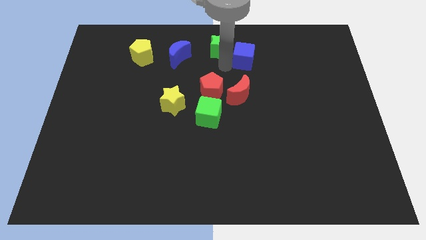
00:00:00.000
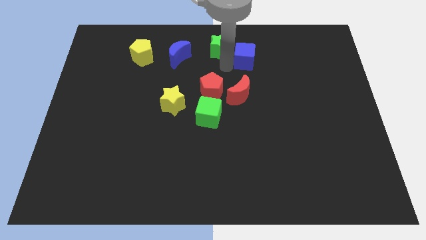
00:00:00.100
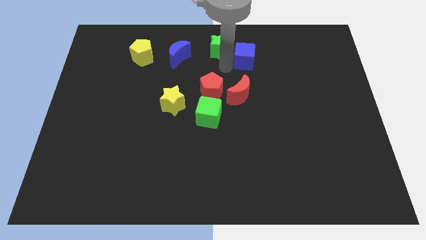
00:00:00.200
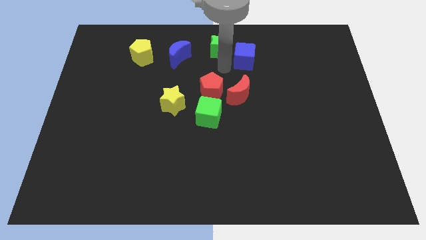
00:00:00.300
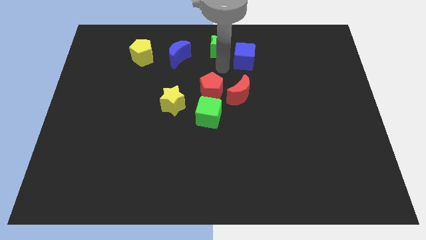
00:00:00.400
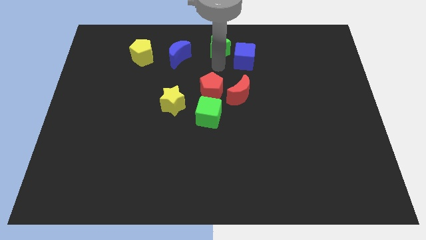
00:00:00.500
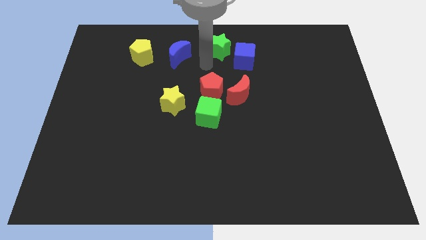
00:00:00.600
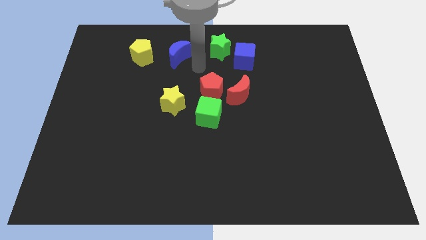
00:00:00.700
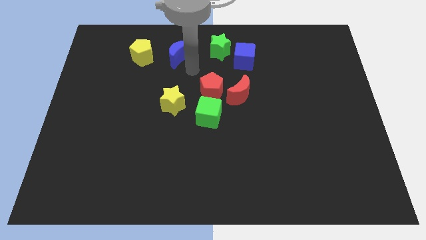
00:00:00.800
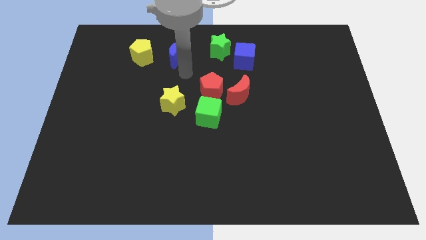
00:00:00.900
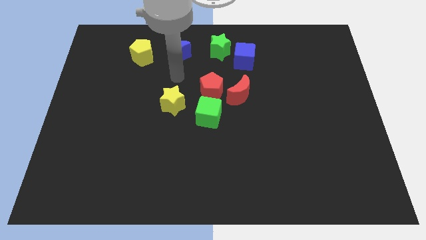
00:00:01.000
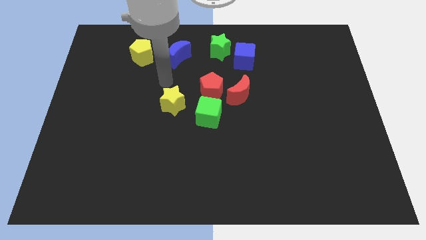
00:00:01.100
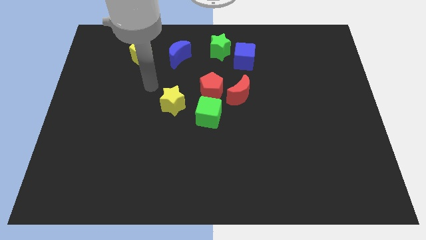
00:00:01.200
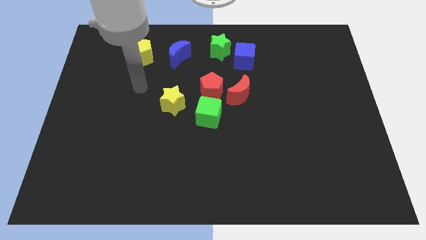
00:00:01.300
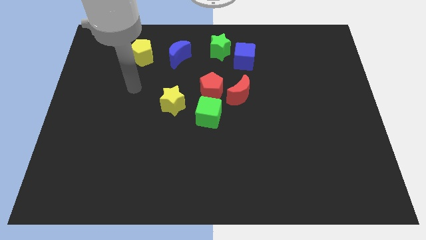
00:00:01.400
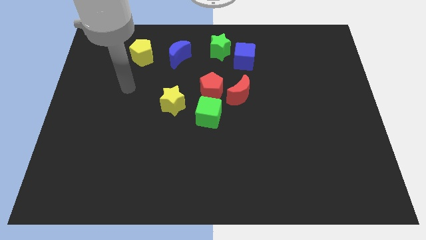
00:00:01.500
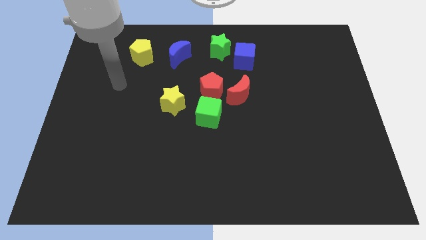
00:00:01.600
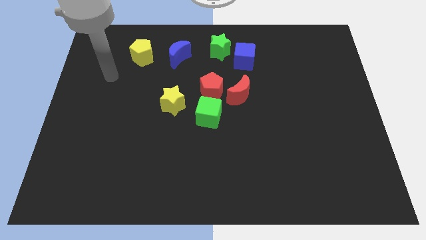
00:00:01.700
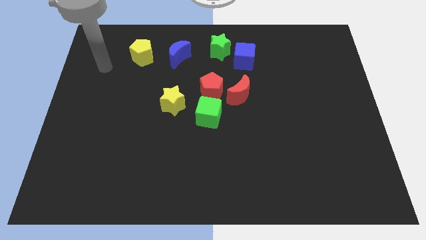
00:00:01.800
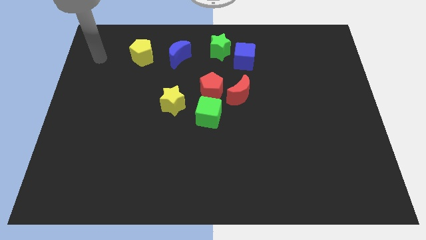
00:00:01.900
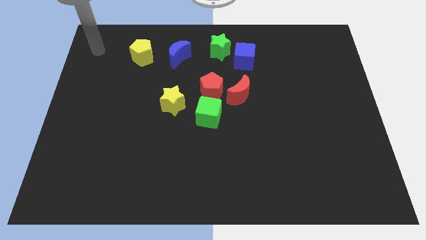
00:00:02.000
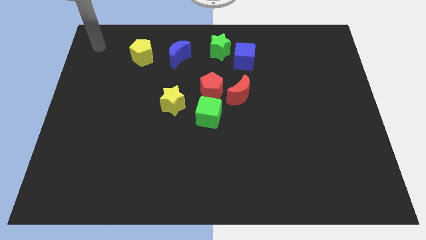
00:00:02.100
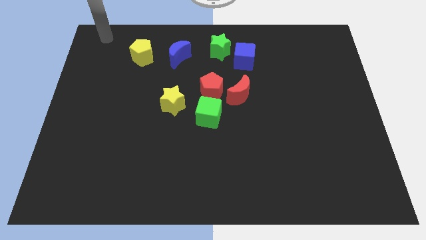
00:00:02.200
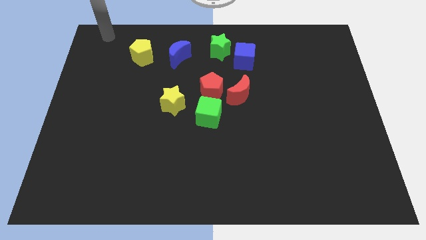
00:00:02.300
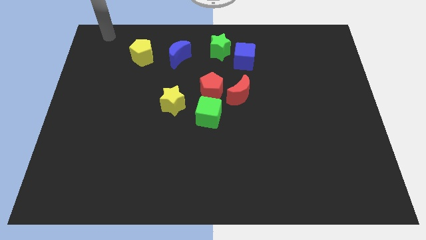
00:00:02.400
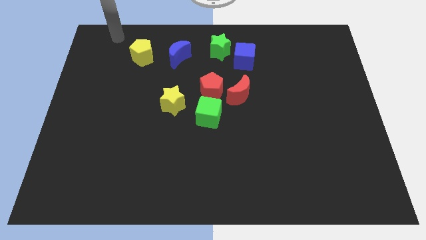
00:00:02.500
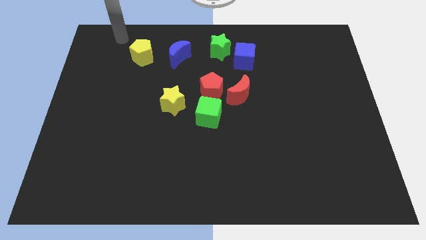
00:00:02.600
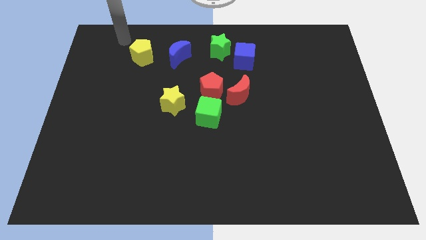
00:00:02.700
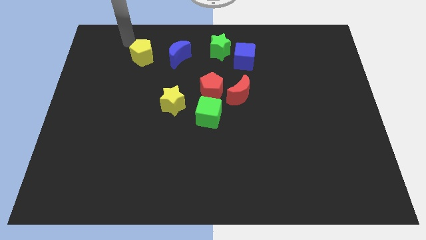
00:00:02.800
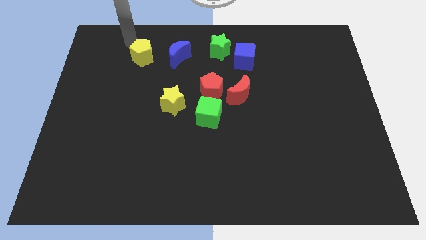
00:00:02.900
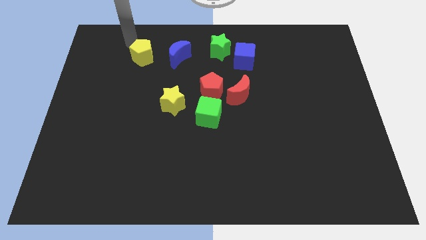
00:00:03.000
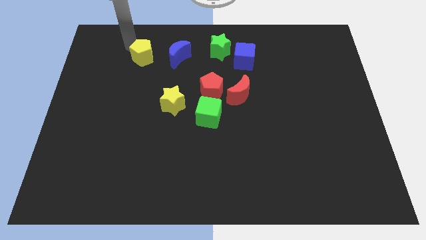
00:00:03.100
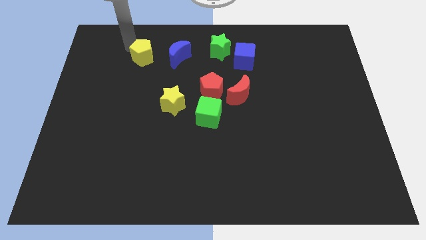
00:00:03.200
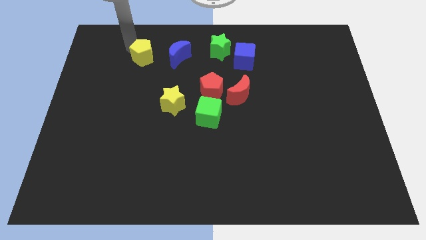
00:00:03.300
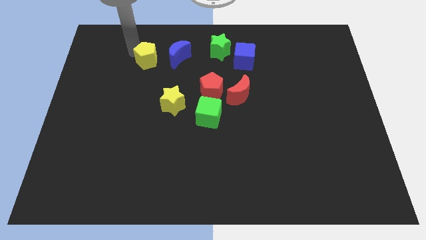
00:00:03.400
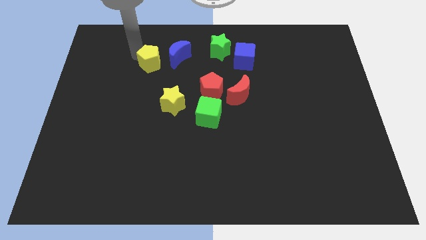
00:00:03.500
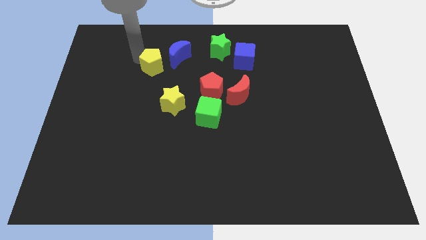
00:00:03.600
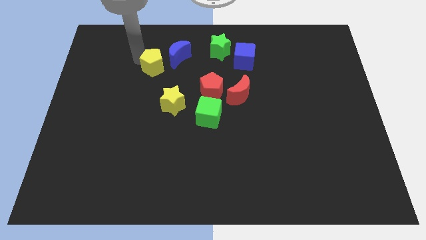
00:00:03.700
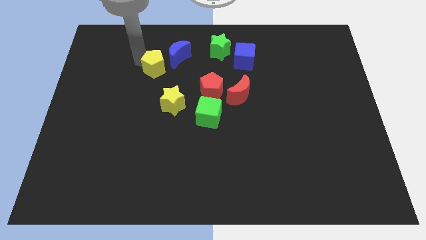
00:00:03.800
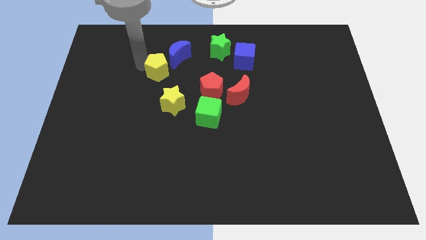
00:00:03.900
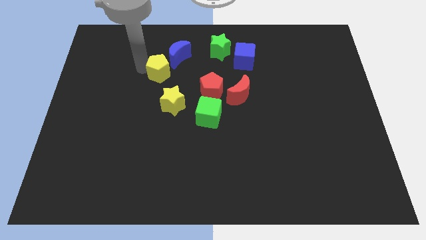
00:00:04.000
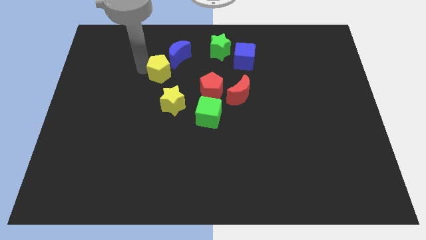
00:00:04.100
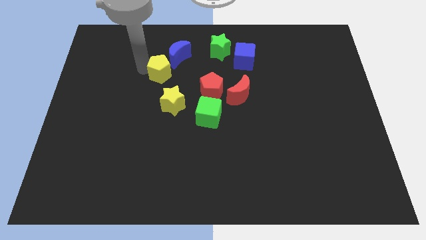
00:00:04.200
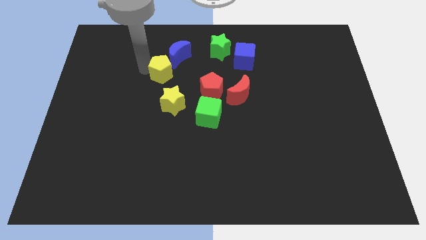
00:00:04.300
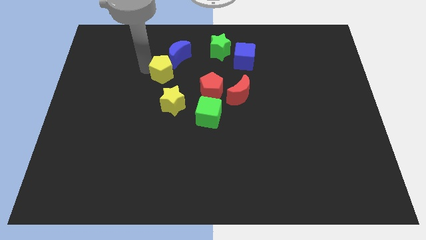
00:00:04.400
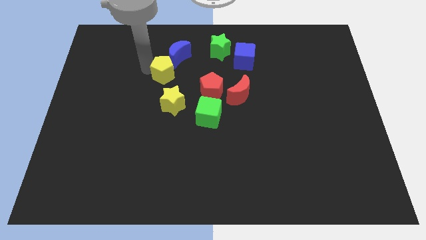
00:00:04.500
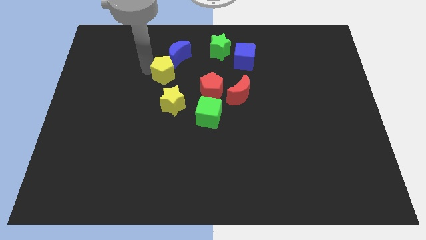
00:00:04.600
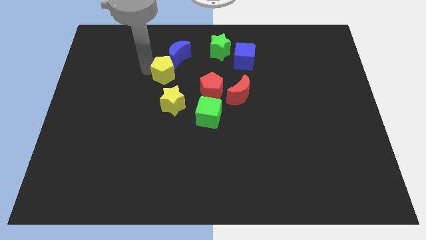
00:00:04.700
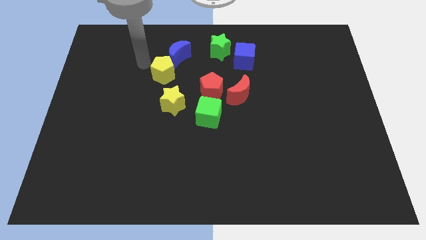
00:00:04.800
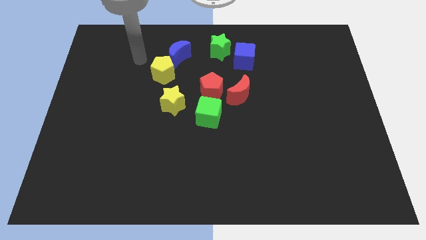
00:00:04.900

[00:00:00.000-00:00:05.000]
move yellow pentagon between yellow star and blue moon

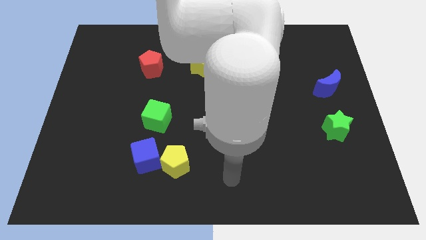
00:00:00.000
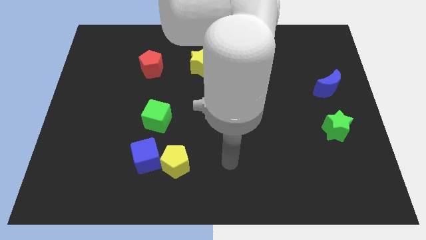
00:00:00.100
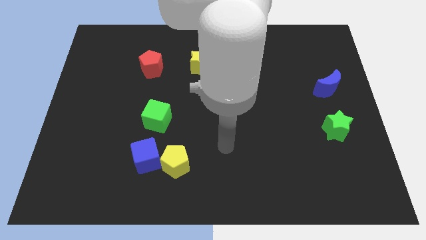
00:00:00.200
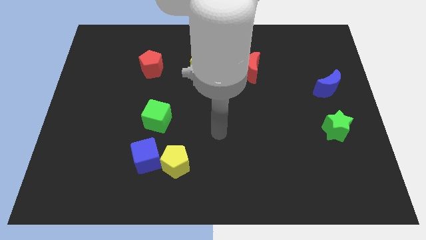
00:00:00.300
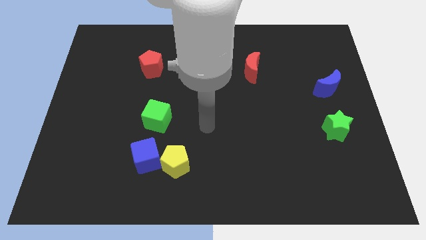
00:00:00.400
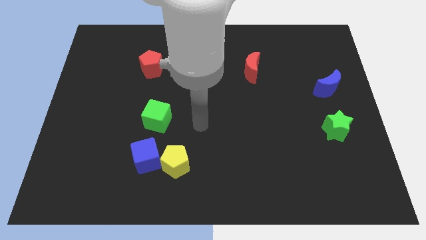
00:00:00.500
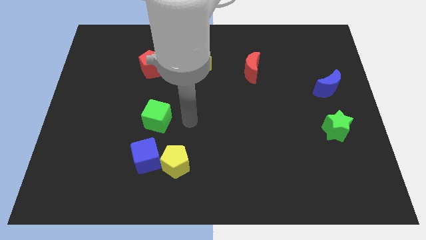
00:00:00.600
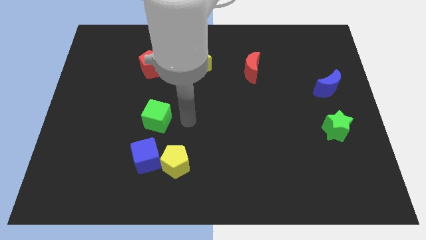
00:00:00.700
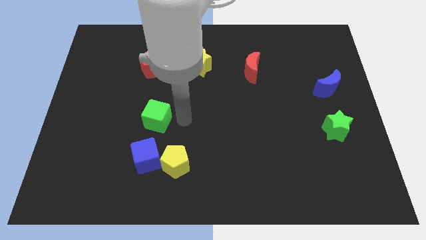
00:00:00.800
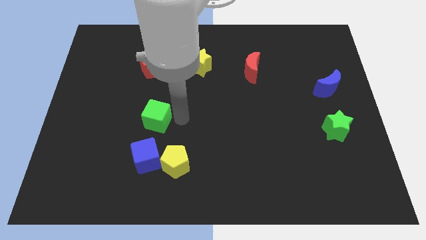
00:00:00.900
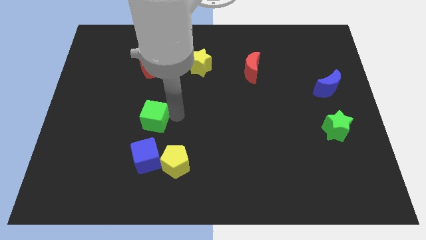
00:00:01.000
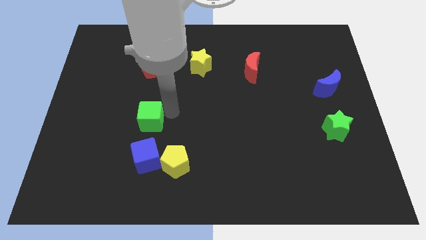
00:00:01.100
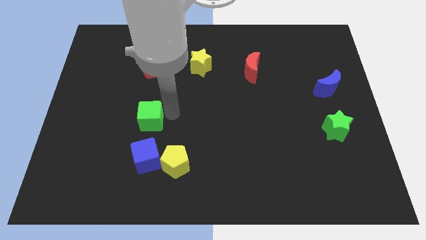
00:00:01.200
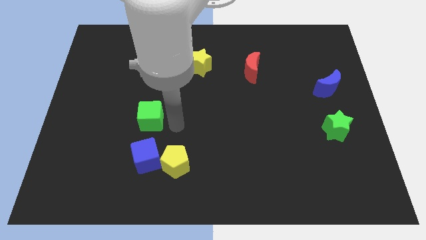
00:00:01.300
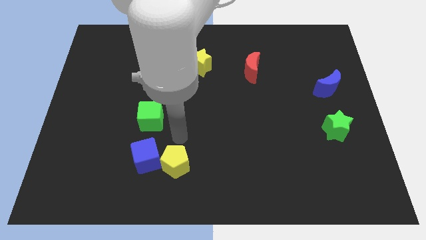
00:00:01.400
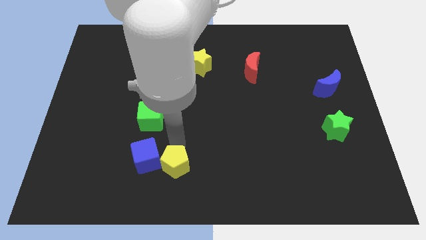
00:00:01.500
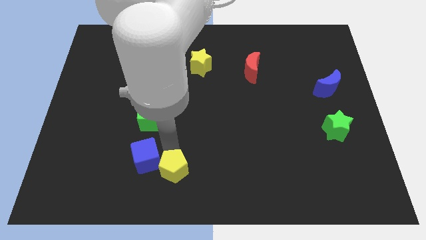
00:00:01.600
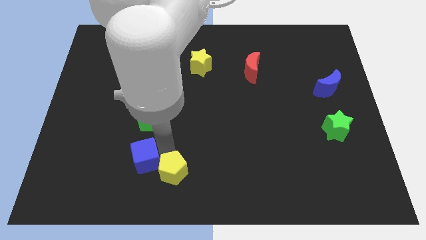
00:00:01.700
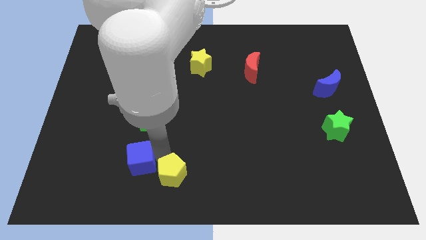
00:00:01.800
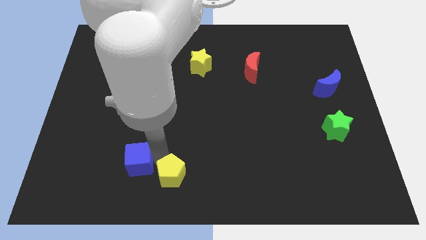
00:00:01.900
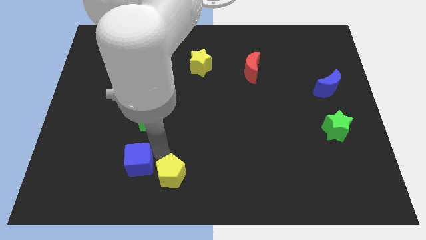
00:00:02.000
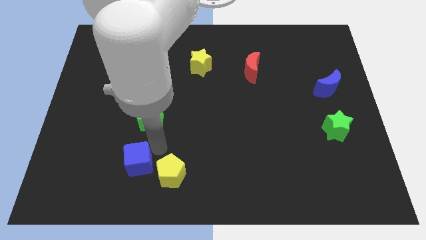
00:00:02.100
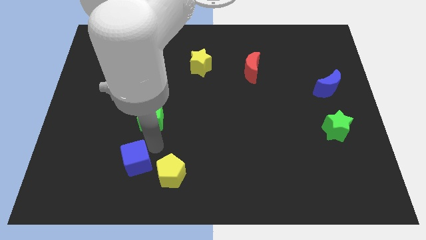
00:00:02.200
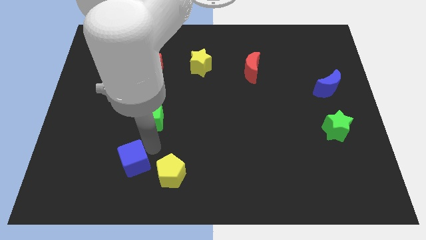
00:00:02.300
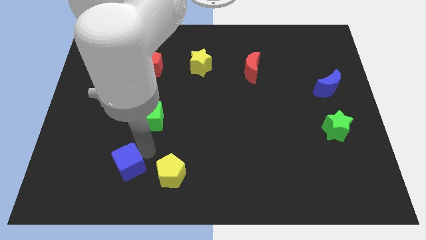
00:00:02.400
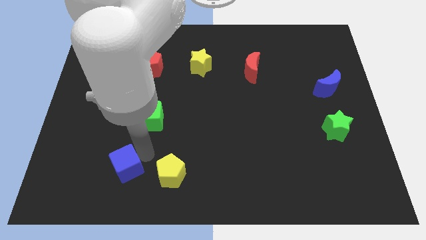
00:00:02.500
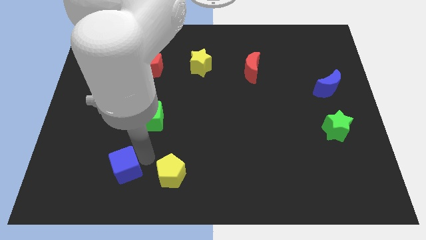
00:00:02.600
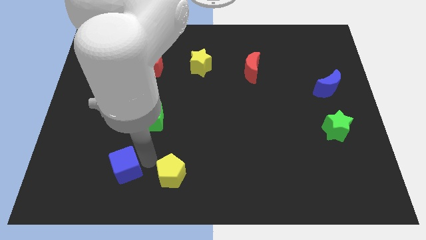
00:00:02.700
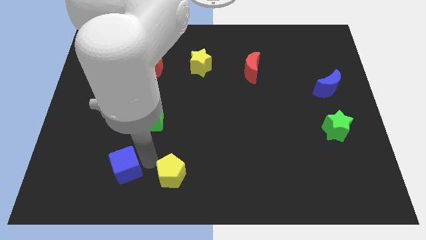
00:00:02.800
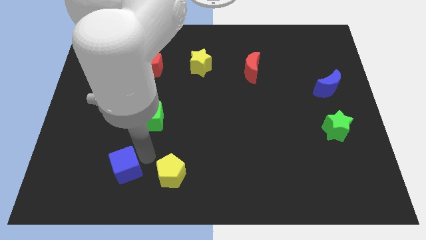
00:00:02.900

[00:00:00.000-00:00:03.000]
make a triangle with the help of green cube blue cube and yellow pentagon

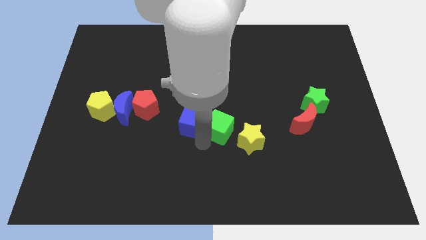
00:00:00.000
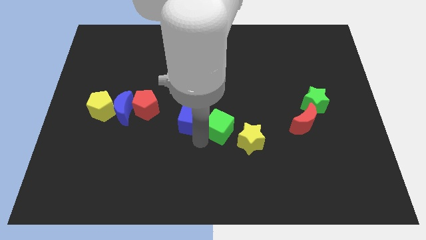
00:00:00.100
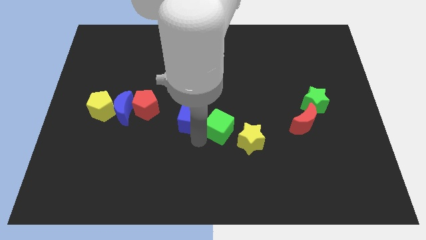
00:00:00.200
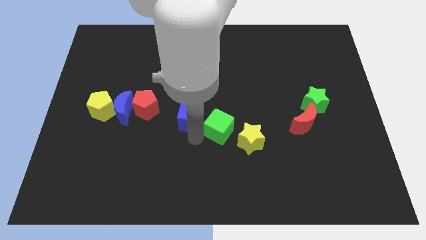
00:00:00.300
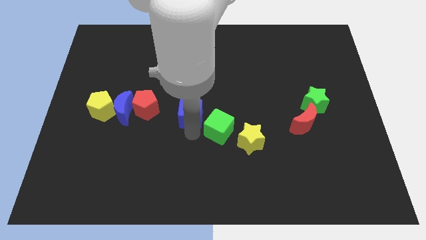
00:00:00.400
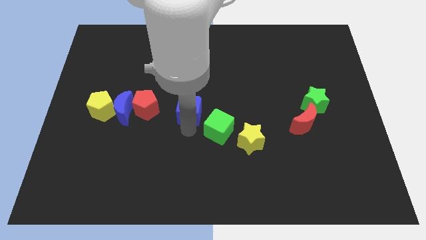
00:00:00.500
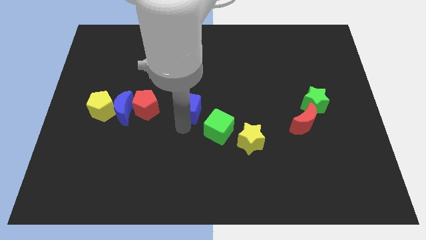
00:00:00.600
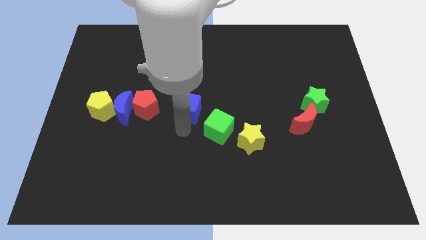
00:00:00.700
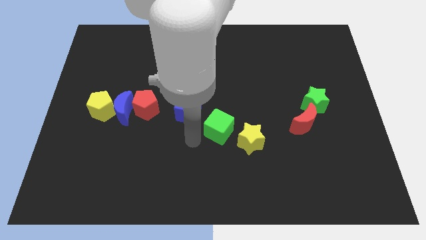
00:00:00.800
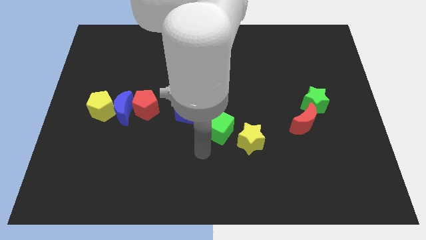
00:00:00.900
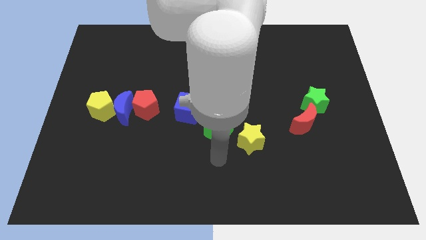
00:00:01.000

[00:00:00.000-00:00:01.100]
place the blue cube to the right side of red pentagon

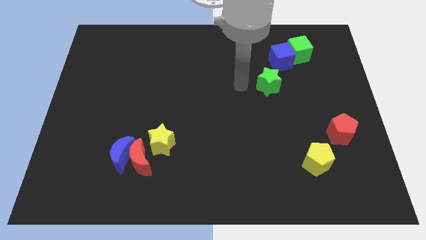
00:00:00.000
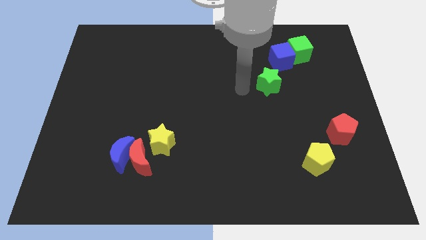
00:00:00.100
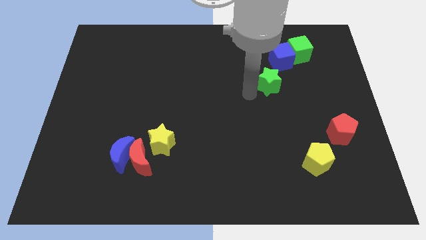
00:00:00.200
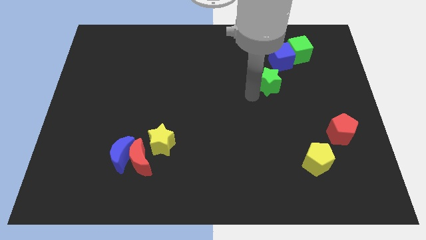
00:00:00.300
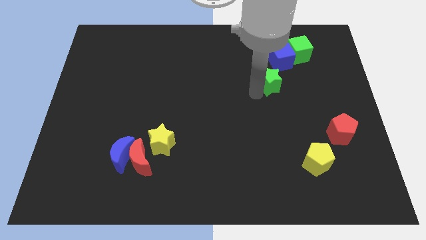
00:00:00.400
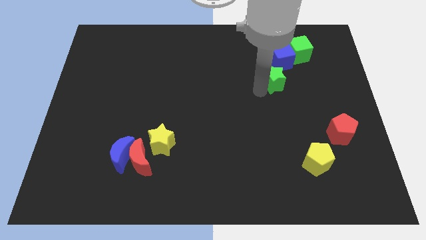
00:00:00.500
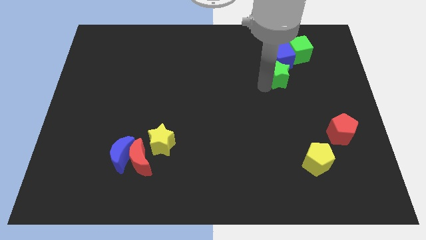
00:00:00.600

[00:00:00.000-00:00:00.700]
push the green star into the blue cube
